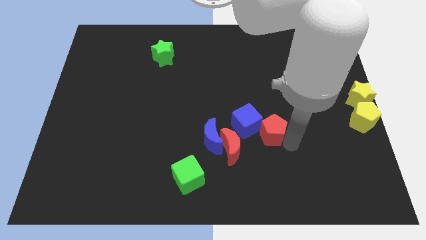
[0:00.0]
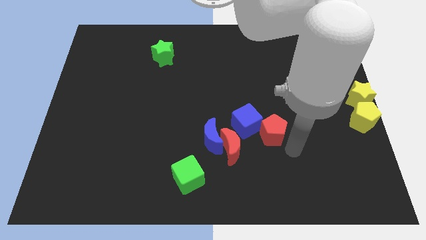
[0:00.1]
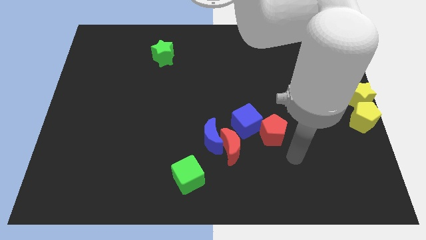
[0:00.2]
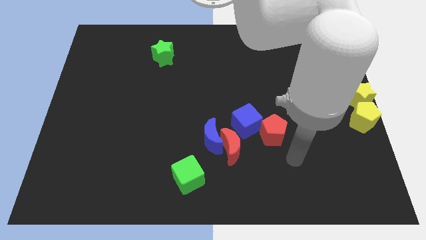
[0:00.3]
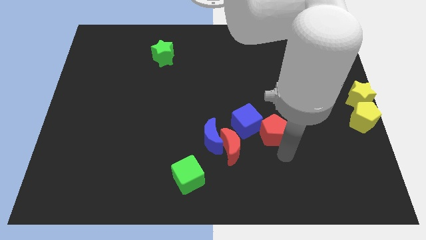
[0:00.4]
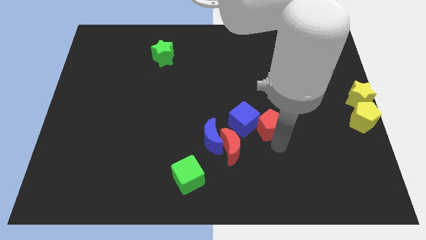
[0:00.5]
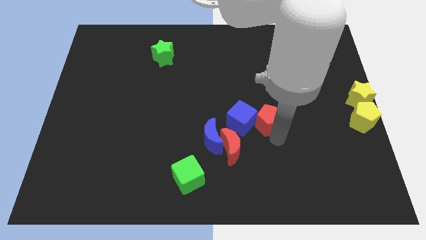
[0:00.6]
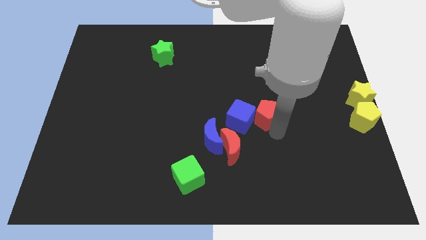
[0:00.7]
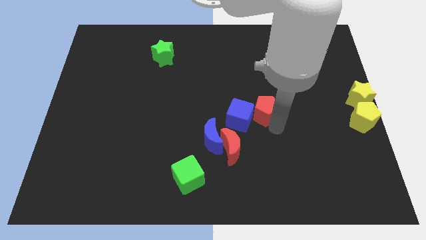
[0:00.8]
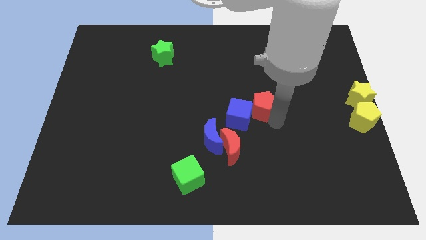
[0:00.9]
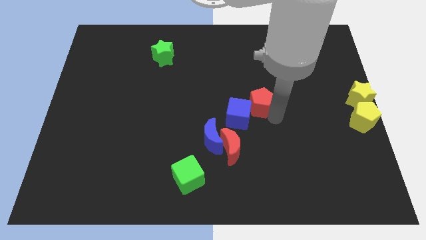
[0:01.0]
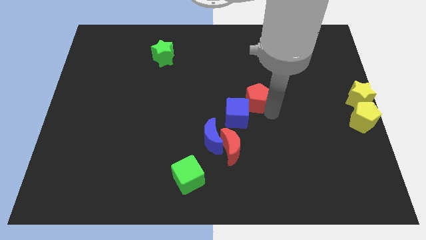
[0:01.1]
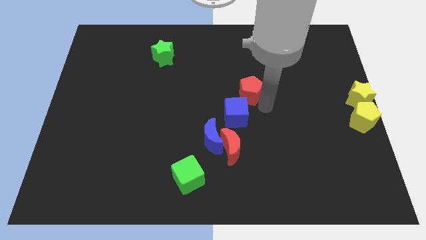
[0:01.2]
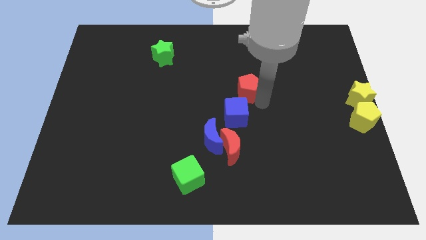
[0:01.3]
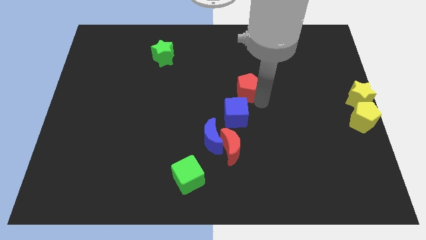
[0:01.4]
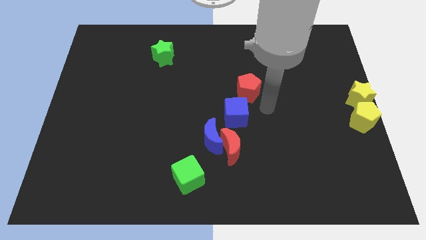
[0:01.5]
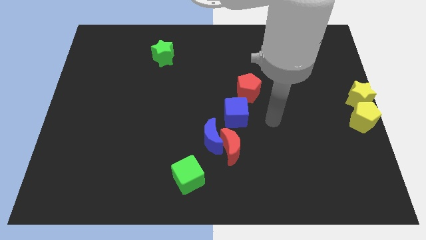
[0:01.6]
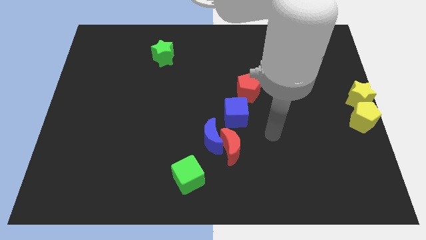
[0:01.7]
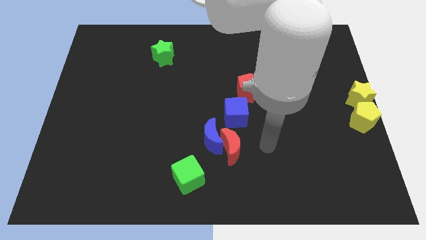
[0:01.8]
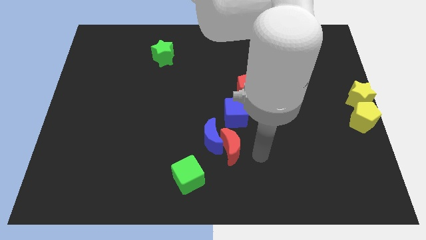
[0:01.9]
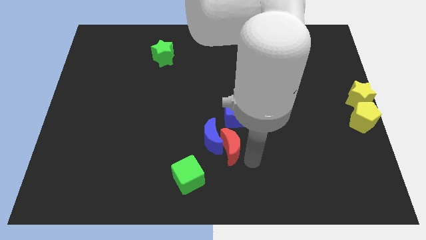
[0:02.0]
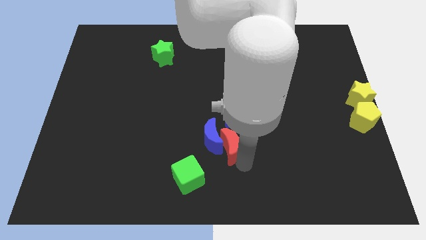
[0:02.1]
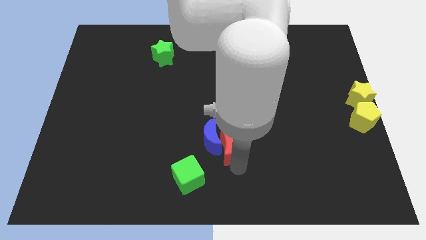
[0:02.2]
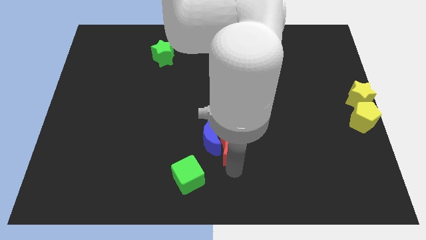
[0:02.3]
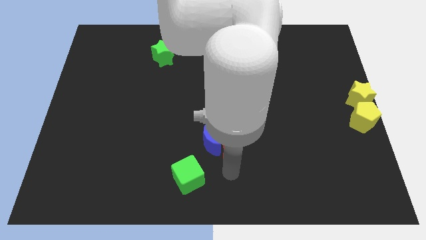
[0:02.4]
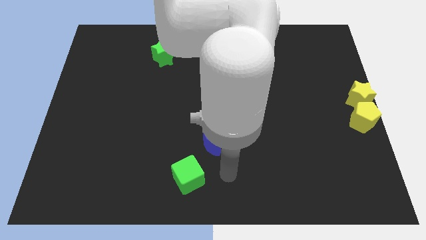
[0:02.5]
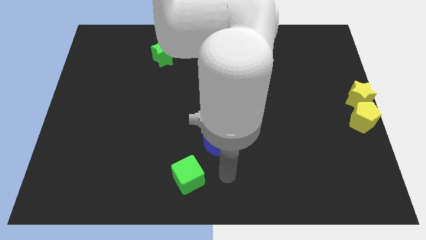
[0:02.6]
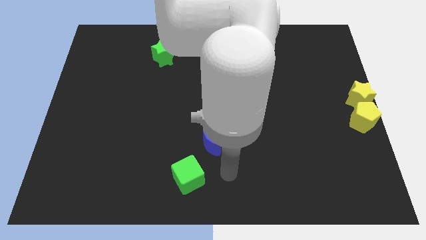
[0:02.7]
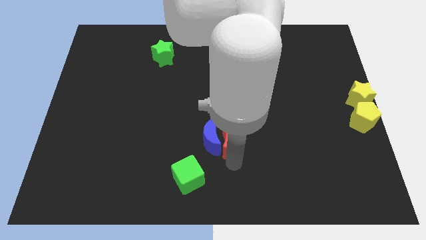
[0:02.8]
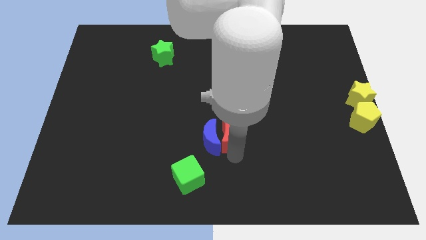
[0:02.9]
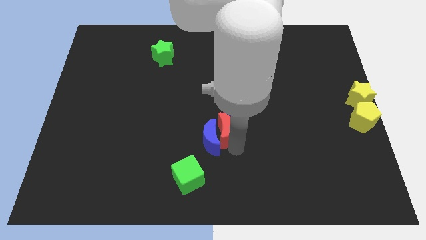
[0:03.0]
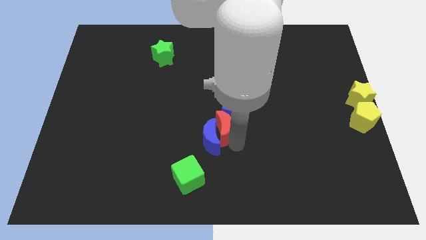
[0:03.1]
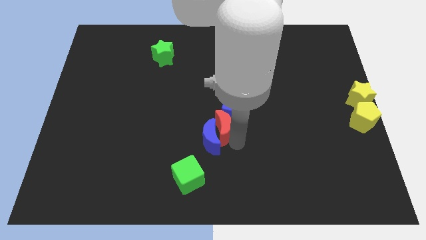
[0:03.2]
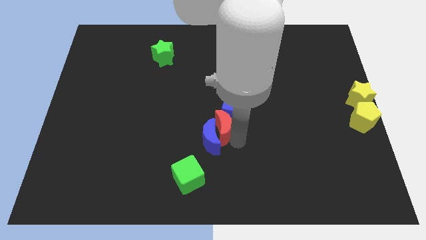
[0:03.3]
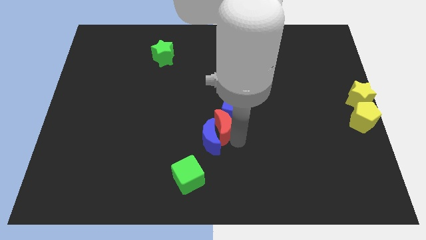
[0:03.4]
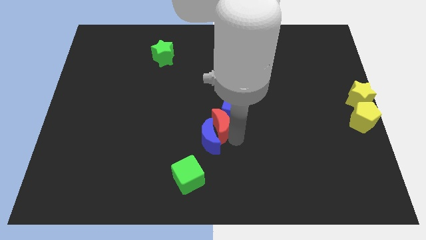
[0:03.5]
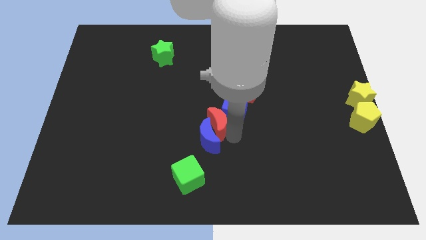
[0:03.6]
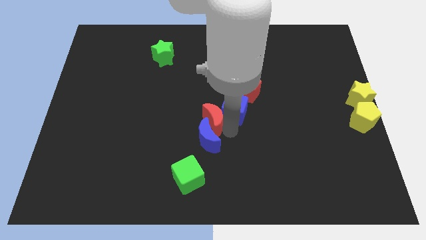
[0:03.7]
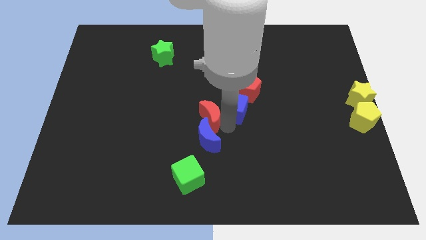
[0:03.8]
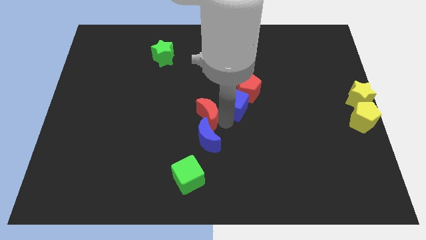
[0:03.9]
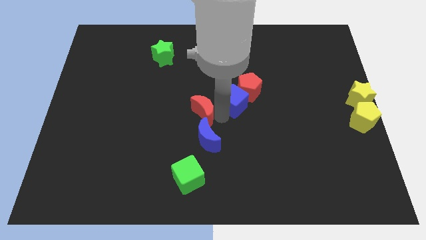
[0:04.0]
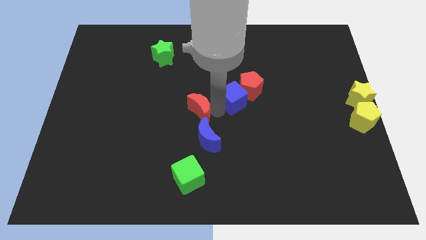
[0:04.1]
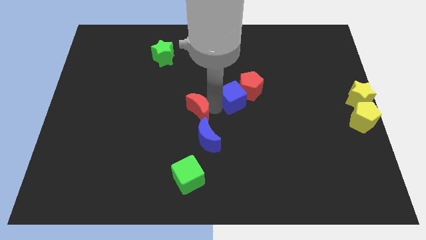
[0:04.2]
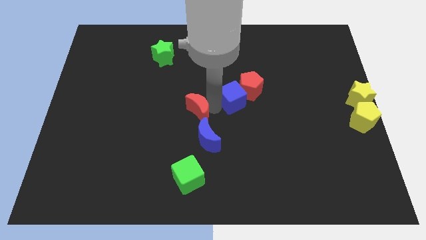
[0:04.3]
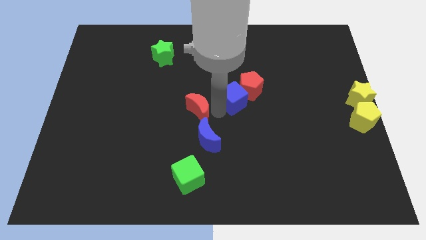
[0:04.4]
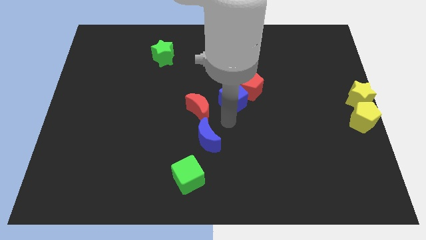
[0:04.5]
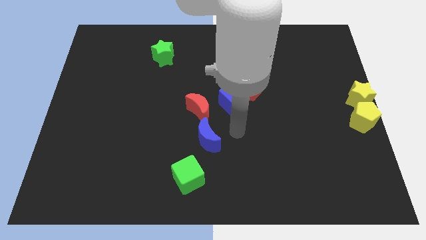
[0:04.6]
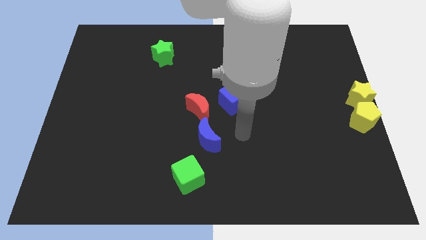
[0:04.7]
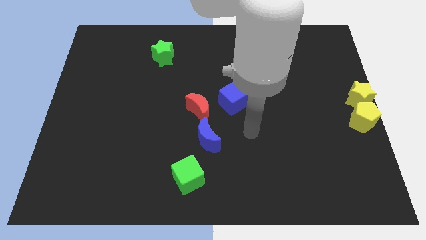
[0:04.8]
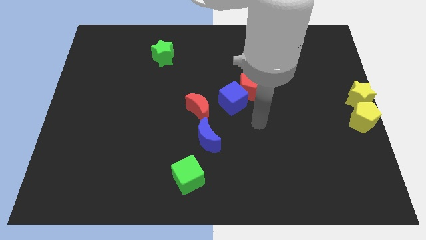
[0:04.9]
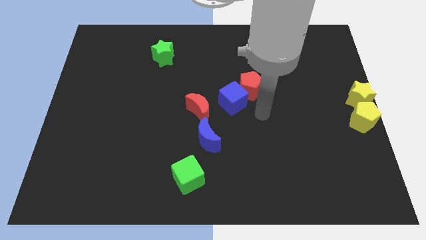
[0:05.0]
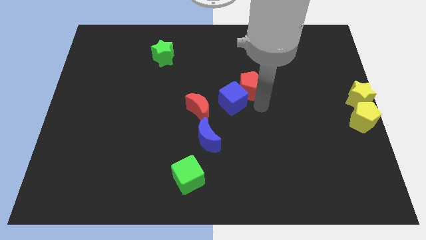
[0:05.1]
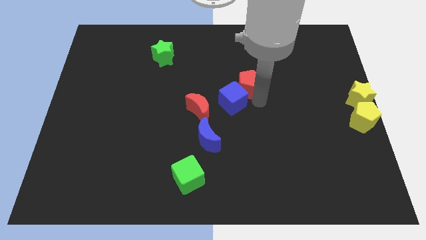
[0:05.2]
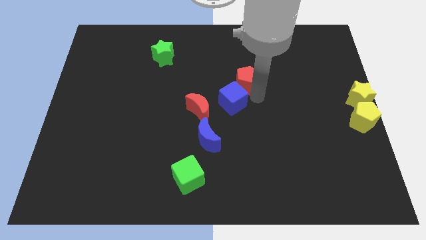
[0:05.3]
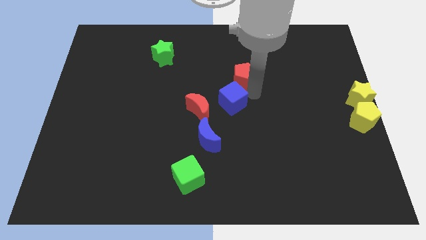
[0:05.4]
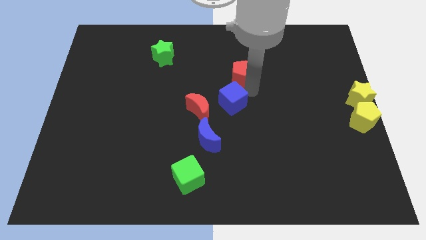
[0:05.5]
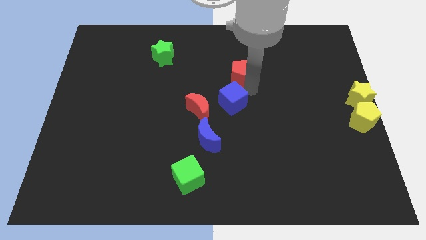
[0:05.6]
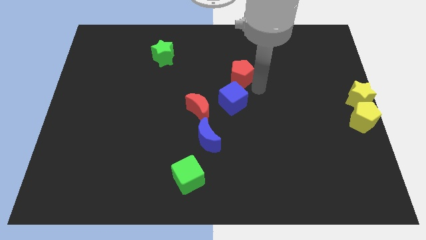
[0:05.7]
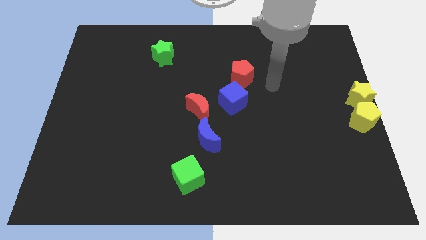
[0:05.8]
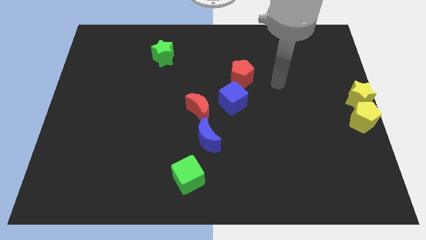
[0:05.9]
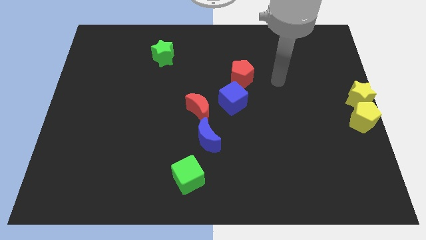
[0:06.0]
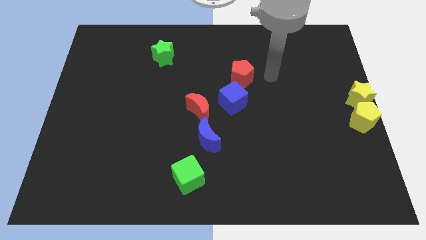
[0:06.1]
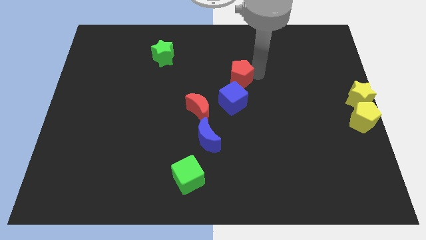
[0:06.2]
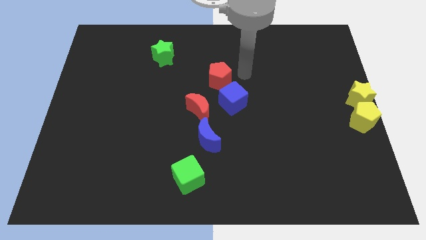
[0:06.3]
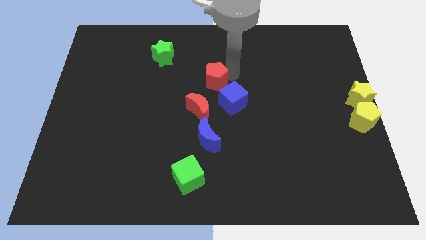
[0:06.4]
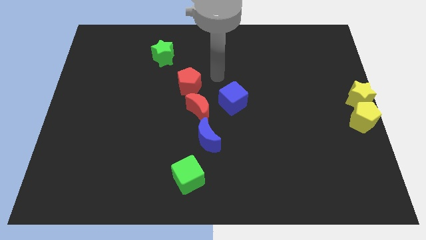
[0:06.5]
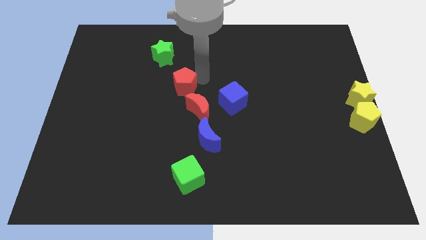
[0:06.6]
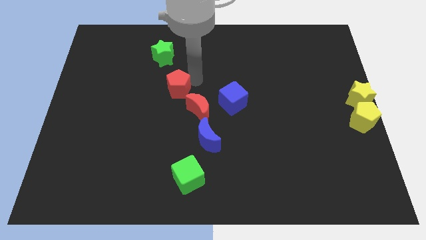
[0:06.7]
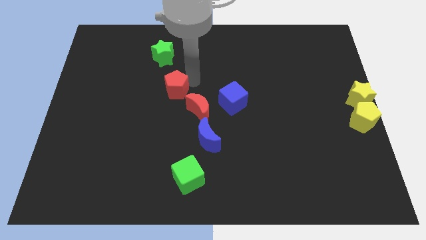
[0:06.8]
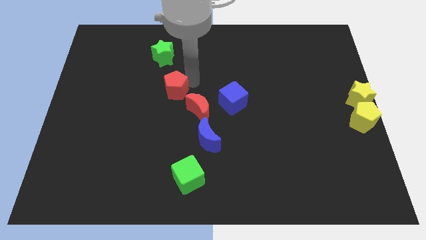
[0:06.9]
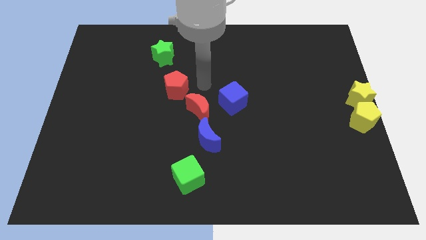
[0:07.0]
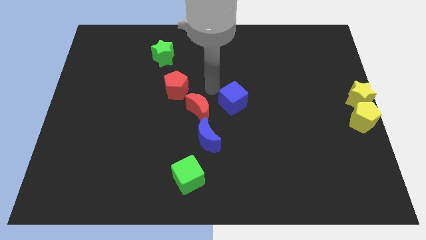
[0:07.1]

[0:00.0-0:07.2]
slide the red pentagon between green star and red moon

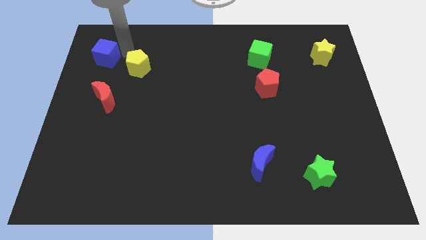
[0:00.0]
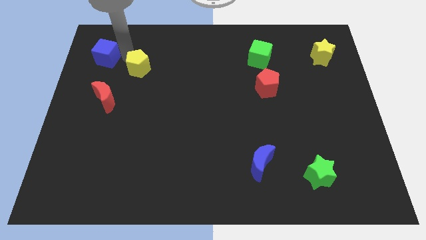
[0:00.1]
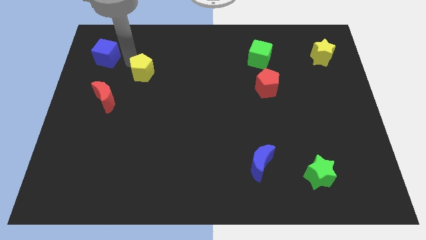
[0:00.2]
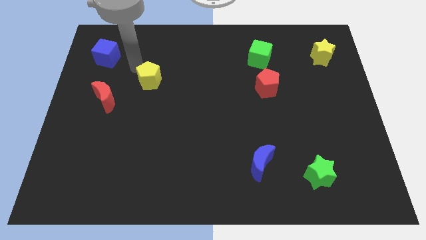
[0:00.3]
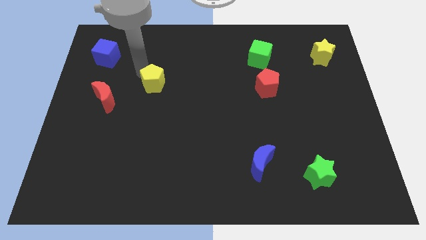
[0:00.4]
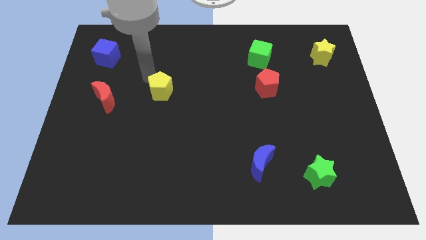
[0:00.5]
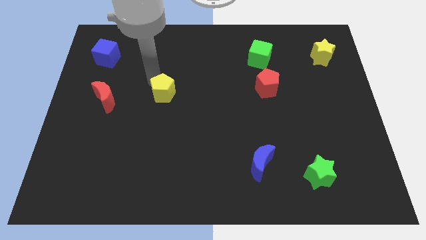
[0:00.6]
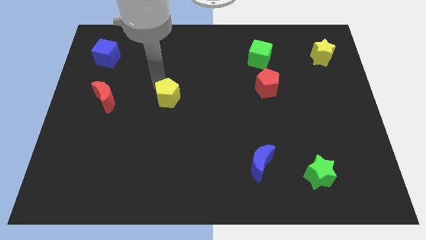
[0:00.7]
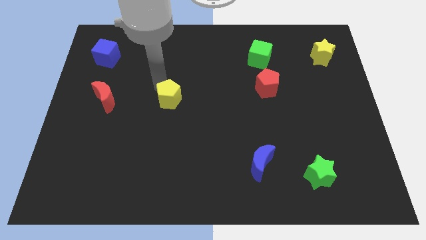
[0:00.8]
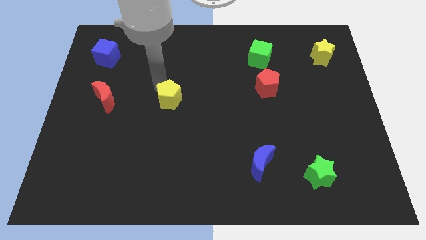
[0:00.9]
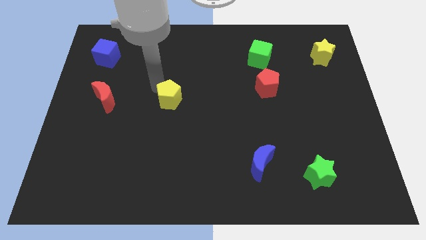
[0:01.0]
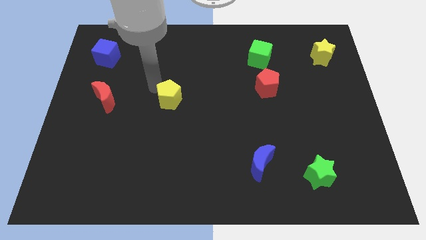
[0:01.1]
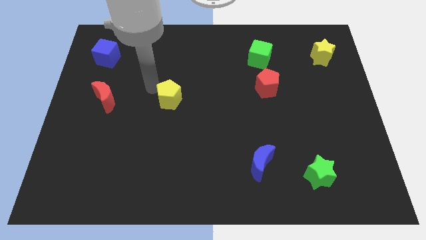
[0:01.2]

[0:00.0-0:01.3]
move the yellow pentagon to the right of the red crescent

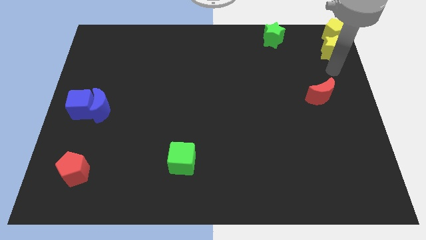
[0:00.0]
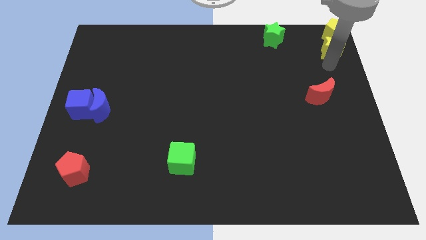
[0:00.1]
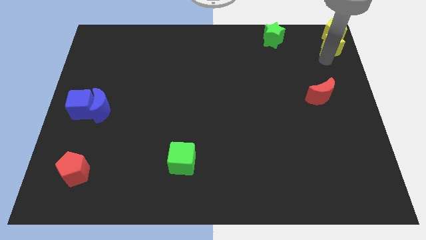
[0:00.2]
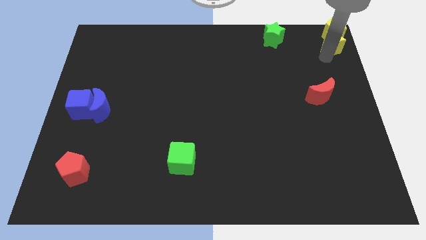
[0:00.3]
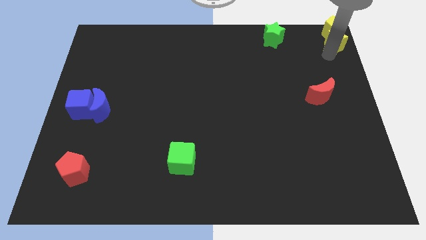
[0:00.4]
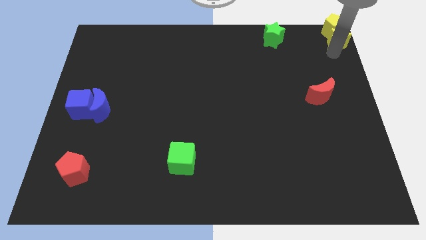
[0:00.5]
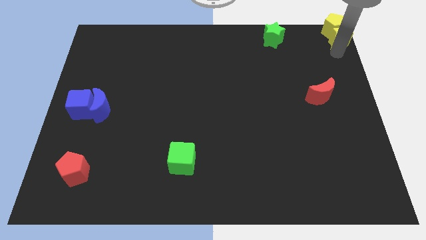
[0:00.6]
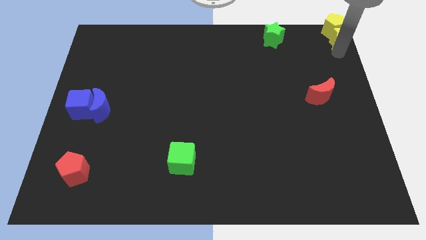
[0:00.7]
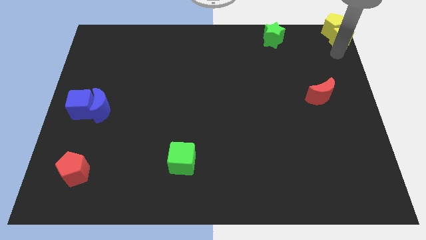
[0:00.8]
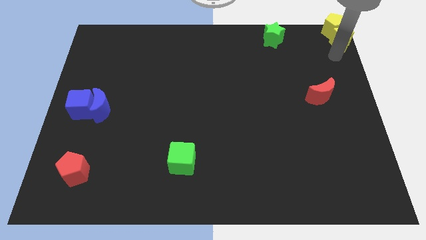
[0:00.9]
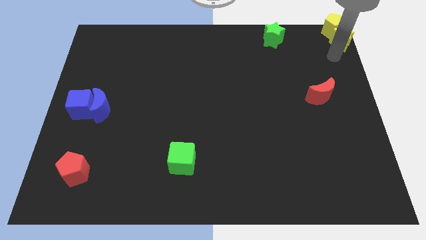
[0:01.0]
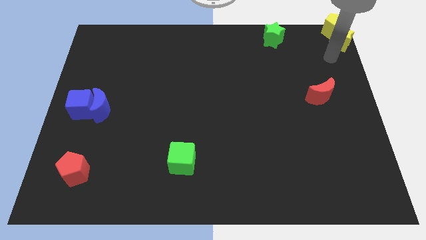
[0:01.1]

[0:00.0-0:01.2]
move the yellow blocks to the top right corner of the board
